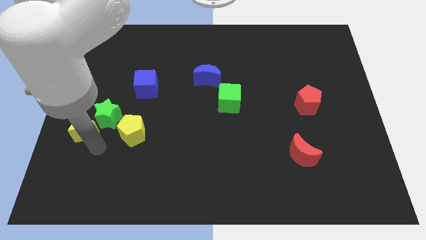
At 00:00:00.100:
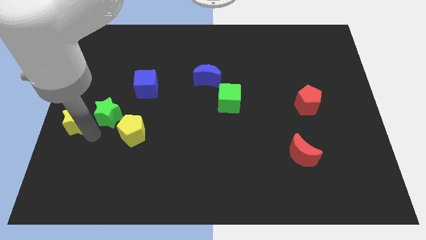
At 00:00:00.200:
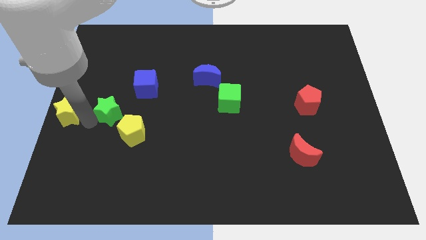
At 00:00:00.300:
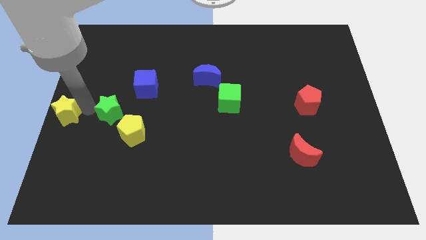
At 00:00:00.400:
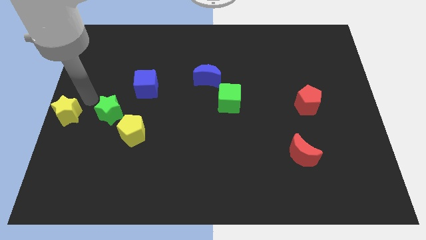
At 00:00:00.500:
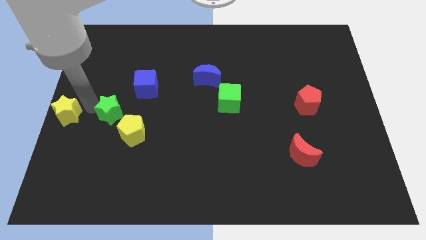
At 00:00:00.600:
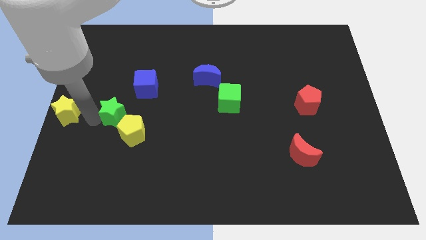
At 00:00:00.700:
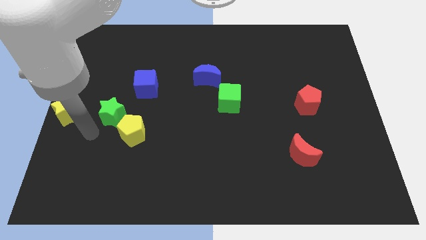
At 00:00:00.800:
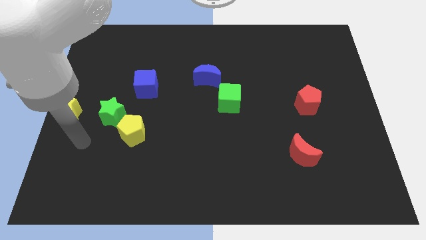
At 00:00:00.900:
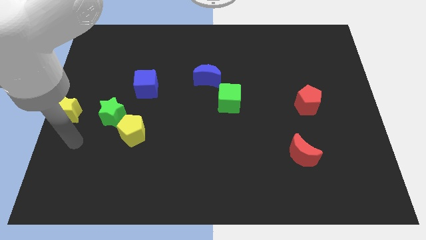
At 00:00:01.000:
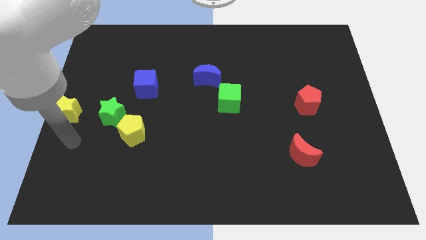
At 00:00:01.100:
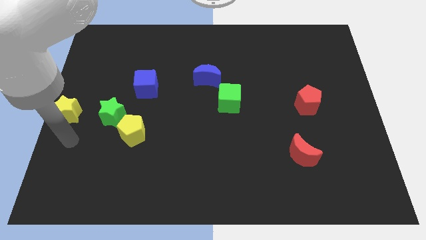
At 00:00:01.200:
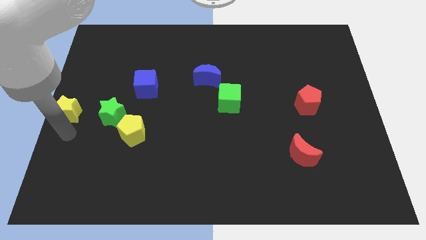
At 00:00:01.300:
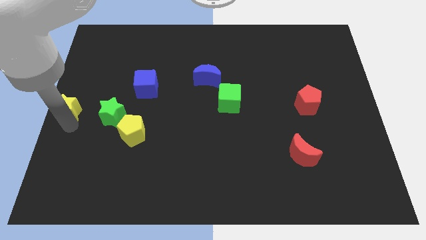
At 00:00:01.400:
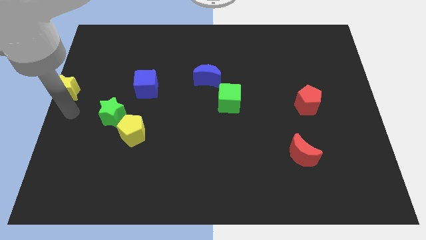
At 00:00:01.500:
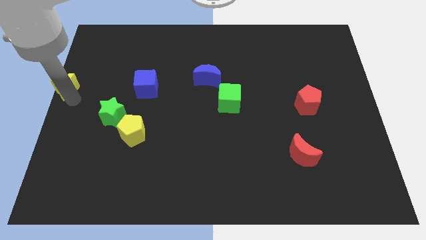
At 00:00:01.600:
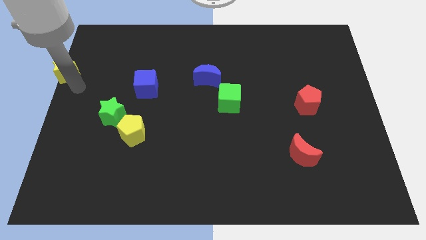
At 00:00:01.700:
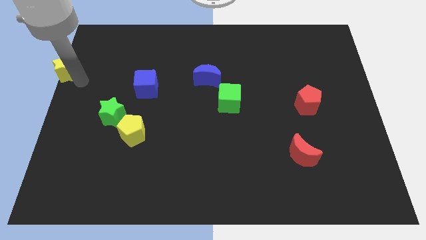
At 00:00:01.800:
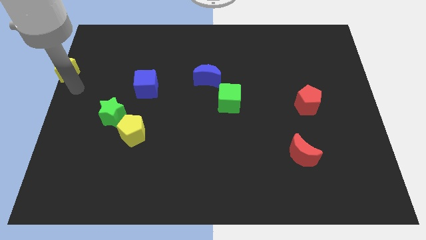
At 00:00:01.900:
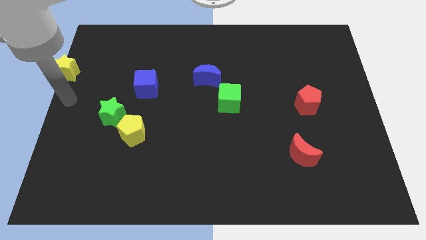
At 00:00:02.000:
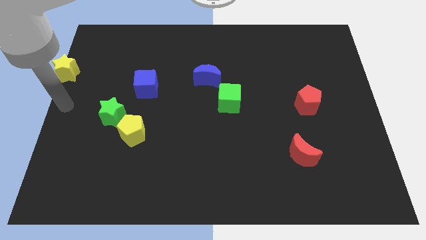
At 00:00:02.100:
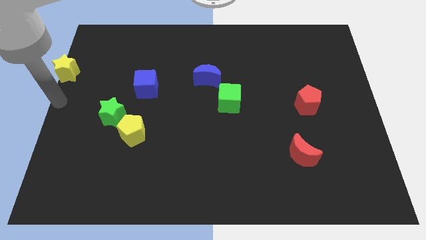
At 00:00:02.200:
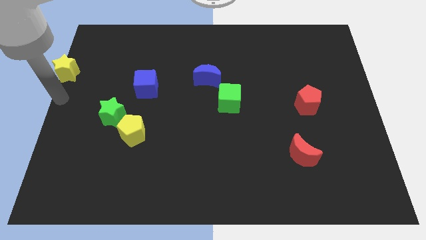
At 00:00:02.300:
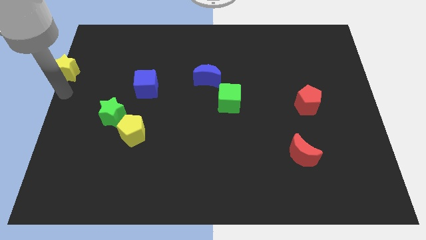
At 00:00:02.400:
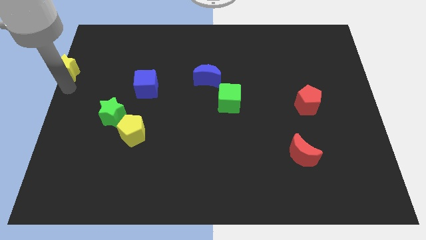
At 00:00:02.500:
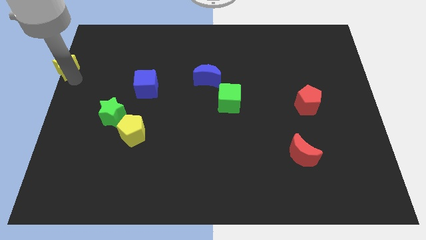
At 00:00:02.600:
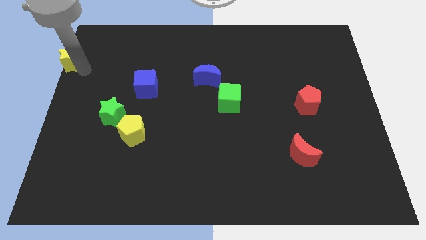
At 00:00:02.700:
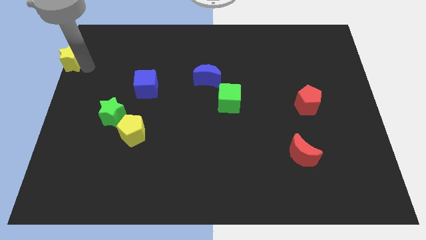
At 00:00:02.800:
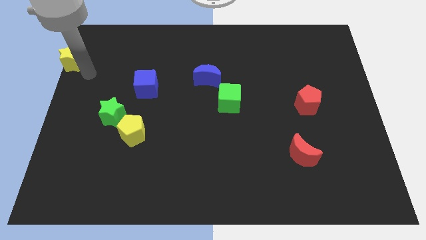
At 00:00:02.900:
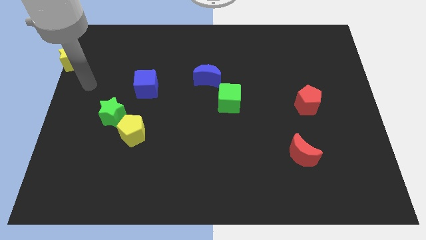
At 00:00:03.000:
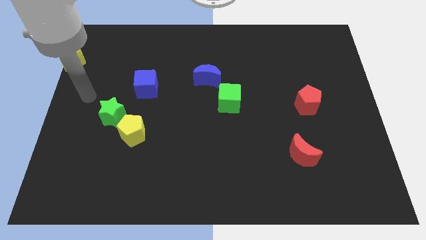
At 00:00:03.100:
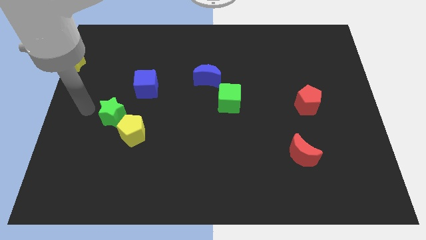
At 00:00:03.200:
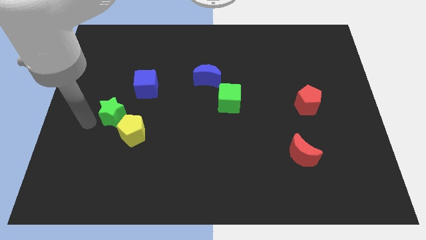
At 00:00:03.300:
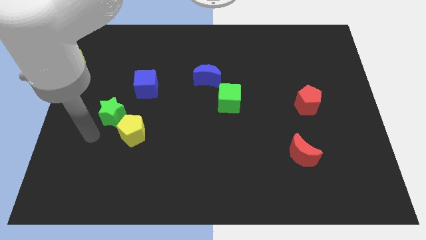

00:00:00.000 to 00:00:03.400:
slide the yellow star towards top left of the board

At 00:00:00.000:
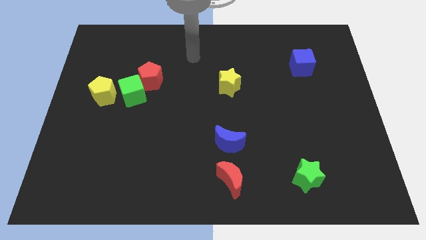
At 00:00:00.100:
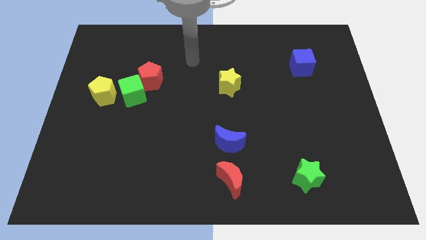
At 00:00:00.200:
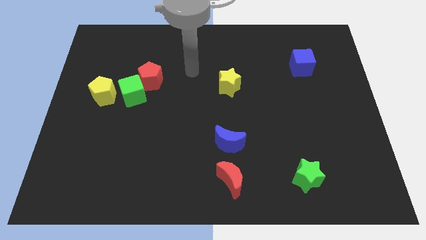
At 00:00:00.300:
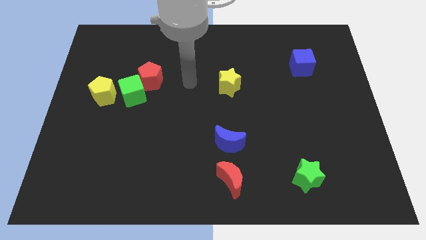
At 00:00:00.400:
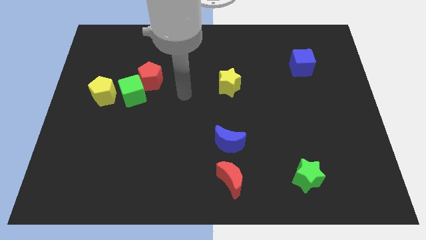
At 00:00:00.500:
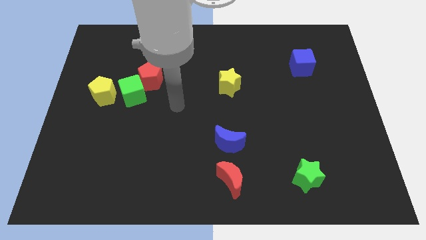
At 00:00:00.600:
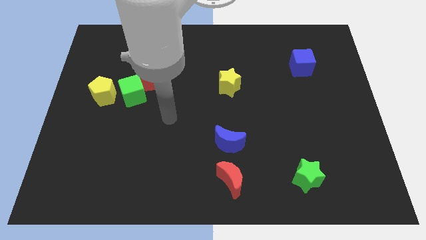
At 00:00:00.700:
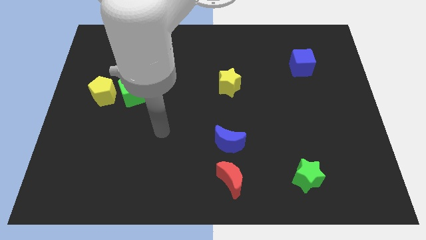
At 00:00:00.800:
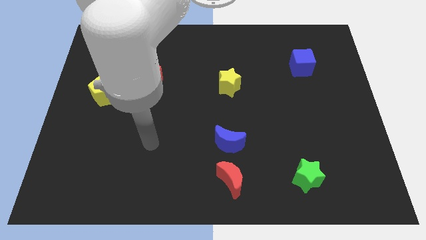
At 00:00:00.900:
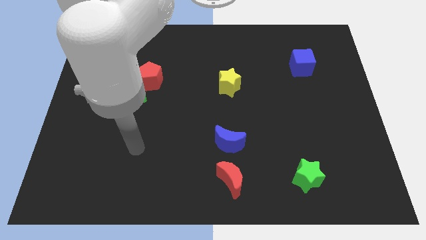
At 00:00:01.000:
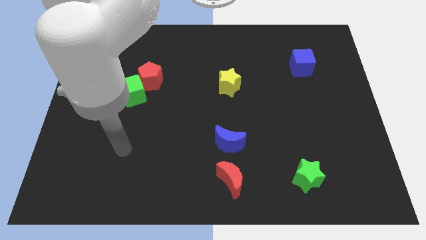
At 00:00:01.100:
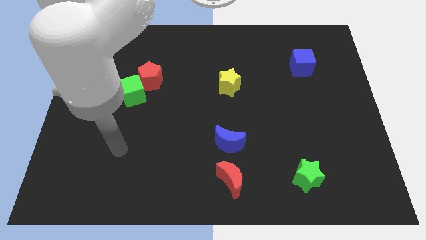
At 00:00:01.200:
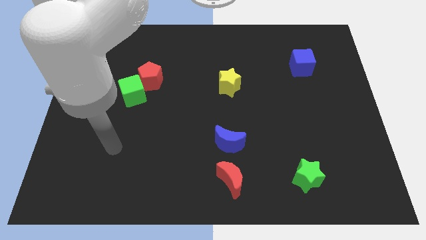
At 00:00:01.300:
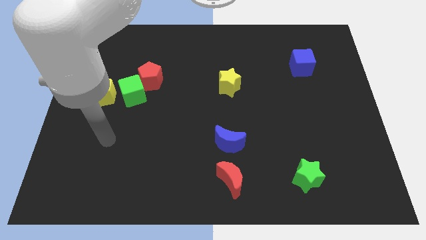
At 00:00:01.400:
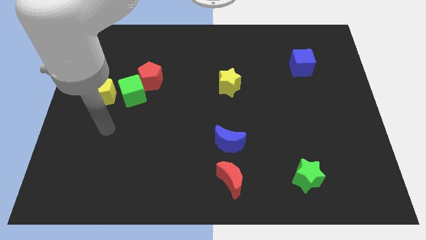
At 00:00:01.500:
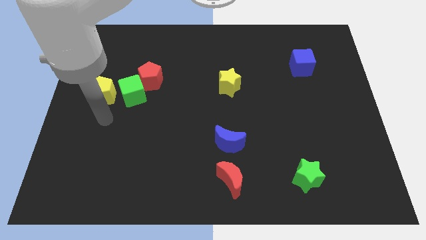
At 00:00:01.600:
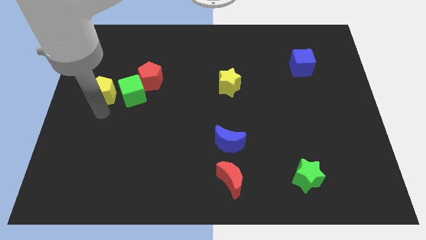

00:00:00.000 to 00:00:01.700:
place your hand below the yellow pentagon

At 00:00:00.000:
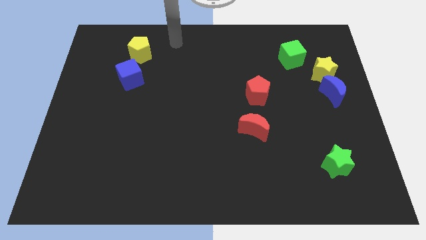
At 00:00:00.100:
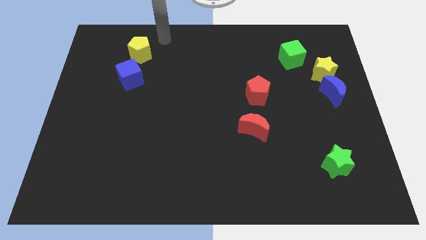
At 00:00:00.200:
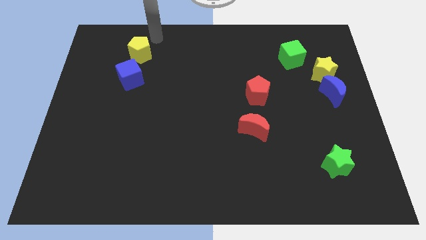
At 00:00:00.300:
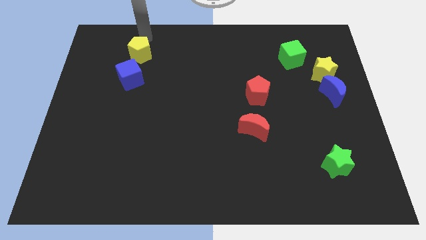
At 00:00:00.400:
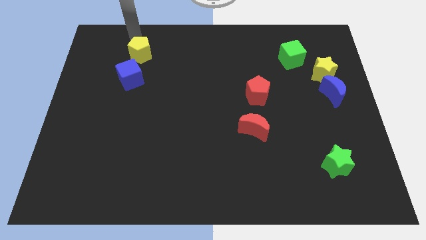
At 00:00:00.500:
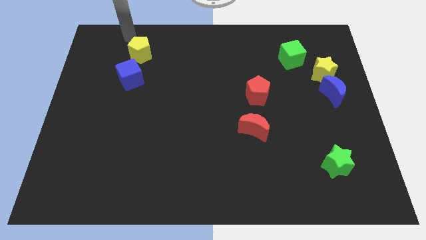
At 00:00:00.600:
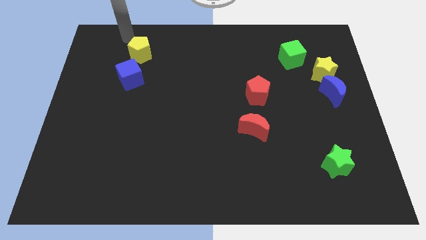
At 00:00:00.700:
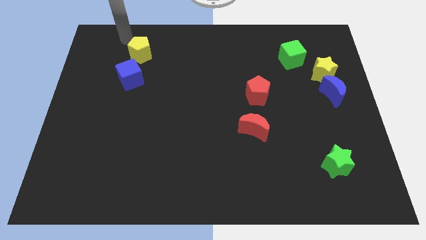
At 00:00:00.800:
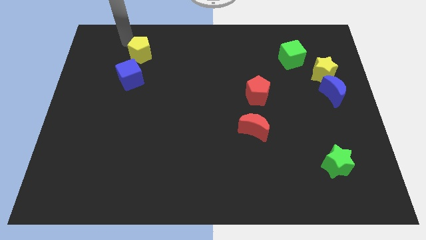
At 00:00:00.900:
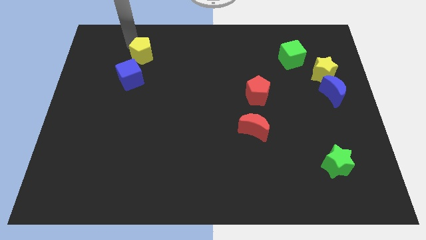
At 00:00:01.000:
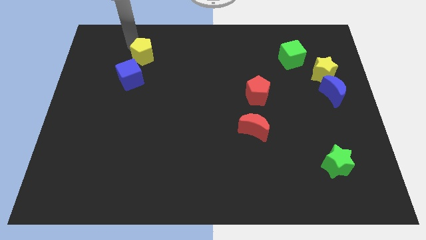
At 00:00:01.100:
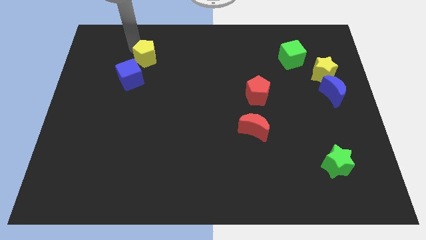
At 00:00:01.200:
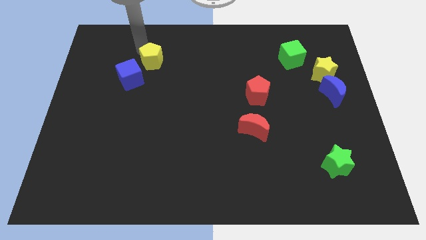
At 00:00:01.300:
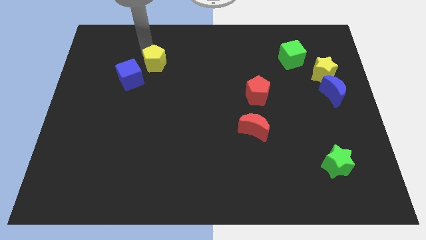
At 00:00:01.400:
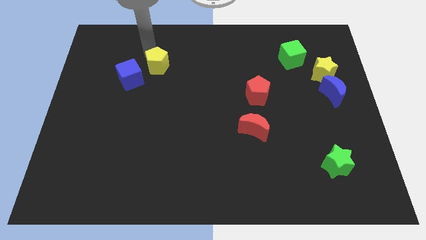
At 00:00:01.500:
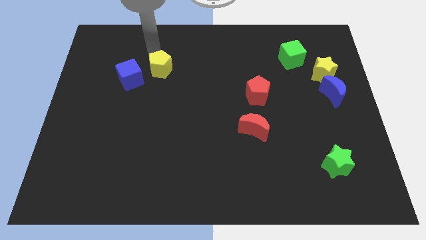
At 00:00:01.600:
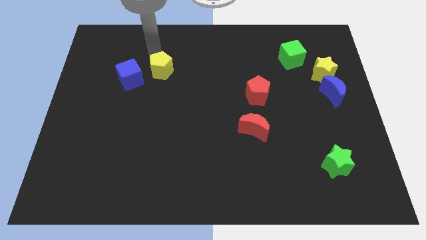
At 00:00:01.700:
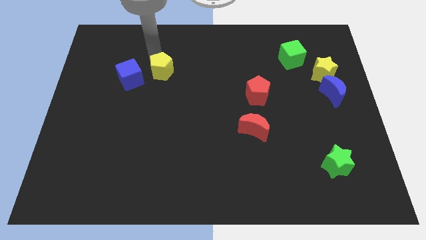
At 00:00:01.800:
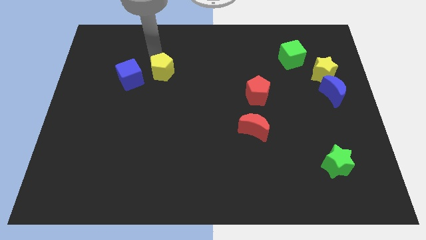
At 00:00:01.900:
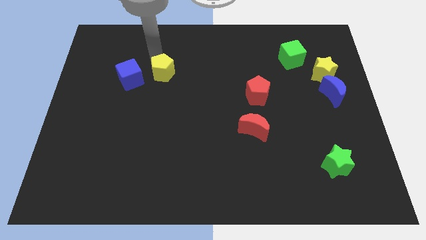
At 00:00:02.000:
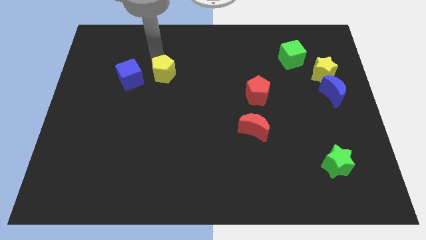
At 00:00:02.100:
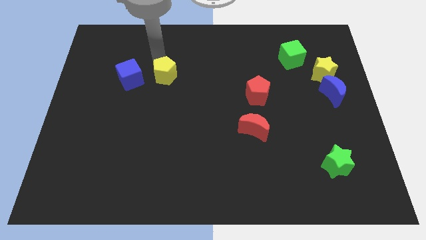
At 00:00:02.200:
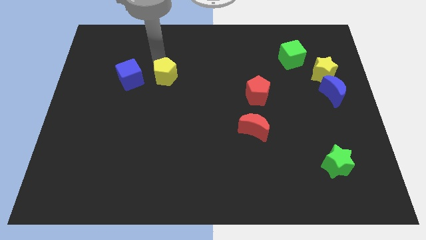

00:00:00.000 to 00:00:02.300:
place the yellow pentagon right to the blue cube

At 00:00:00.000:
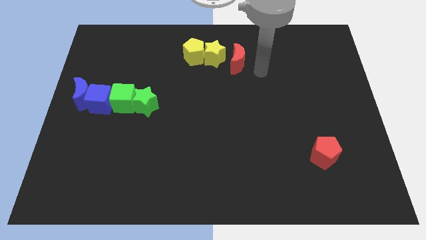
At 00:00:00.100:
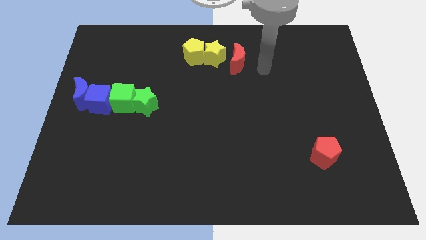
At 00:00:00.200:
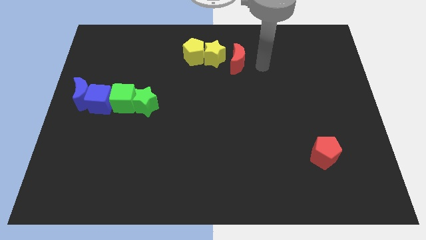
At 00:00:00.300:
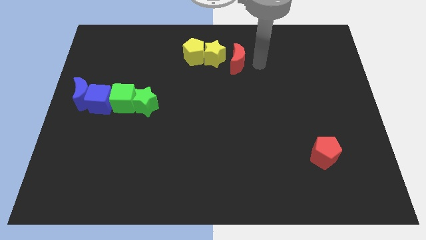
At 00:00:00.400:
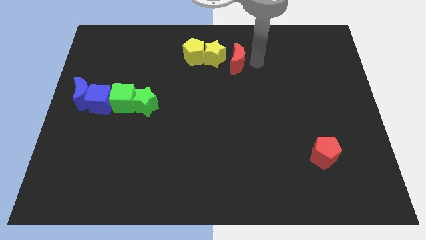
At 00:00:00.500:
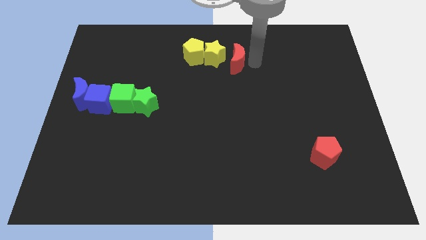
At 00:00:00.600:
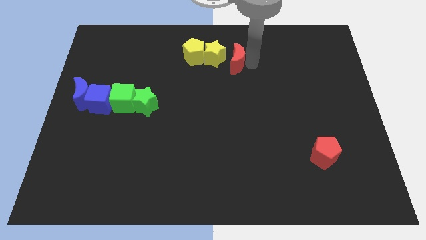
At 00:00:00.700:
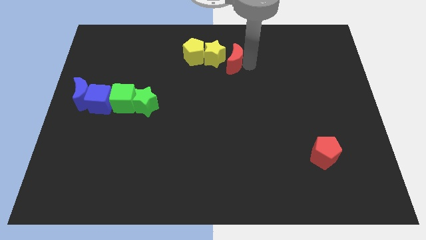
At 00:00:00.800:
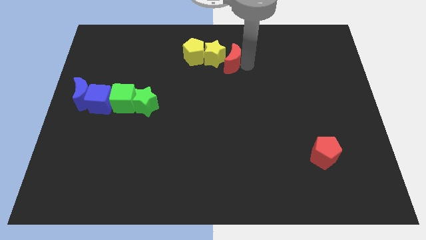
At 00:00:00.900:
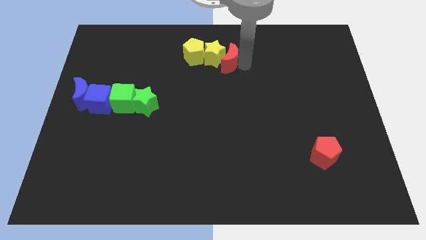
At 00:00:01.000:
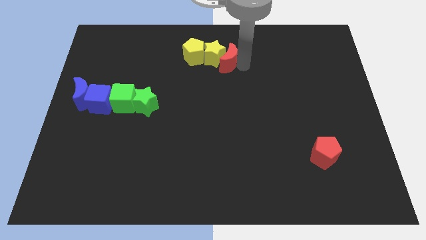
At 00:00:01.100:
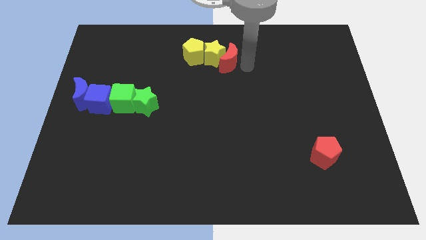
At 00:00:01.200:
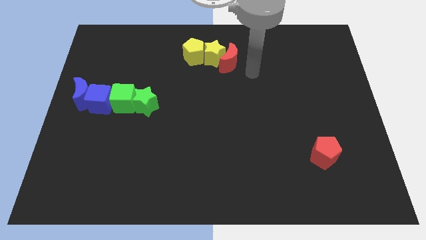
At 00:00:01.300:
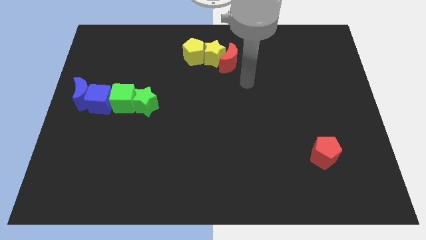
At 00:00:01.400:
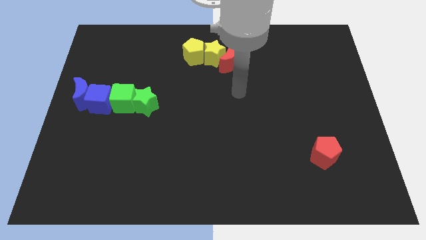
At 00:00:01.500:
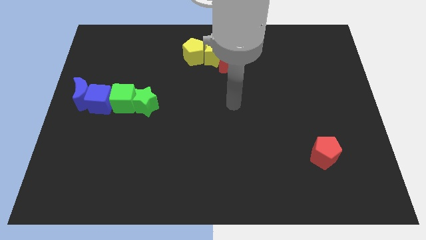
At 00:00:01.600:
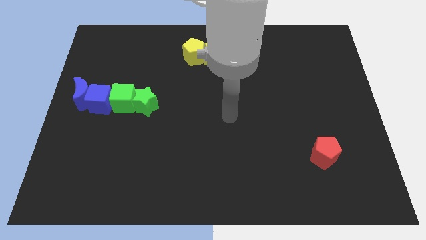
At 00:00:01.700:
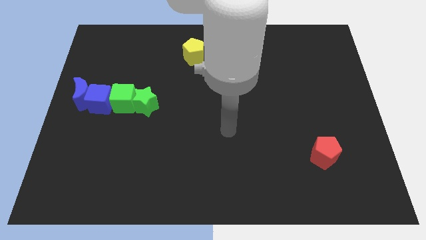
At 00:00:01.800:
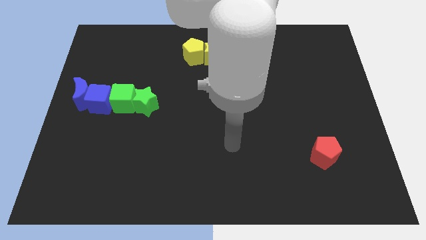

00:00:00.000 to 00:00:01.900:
push the red crescent into yellow star
